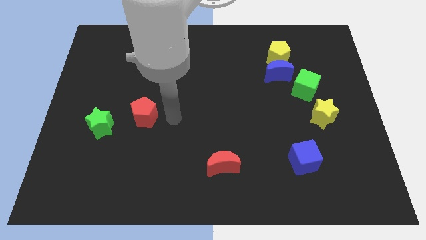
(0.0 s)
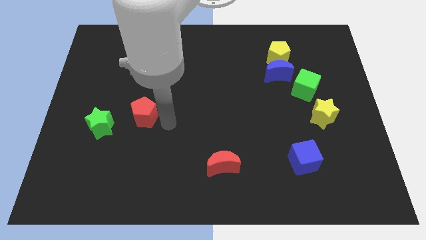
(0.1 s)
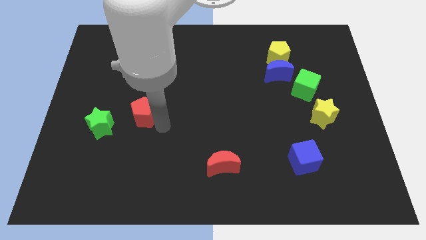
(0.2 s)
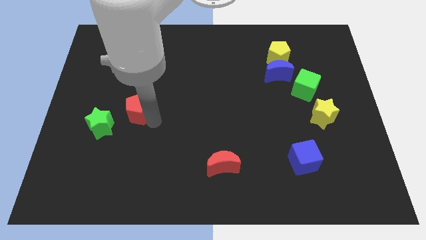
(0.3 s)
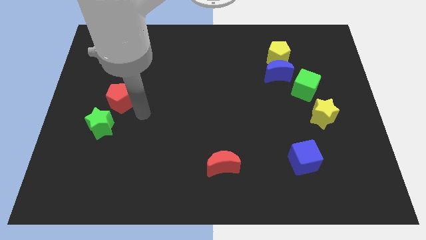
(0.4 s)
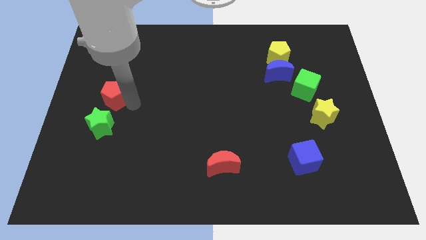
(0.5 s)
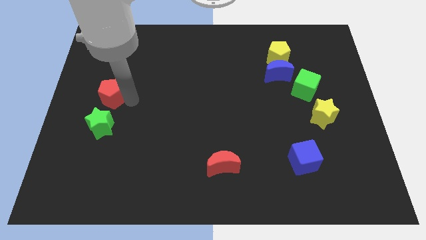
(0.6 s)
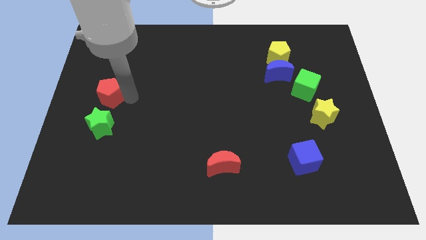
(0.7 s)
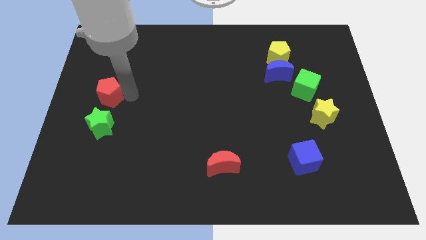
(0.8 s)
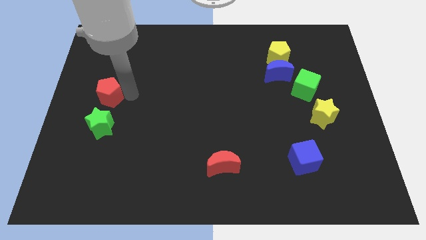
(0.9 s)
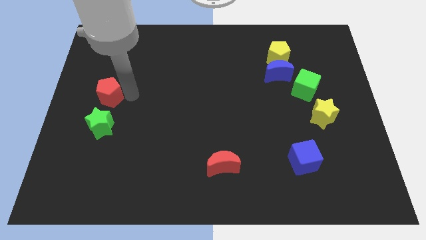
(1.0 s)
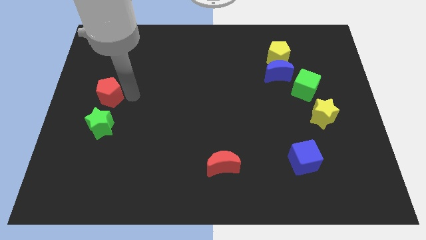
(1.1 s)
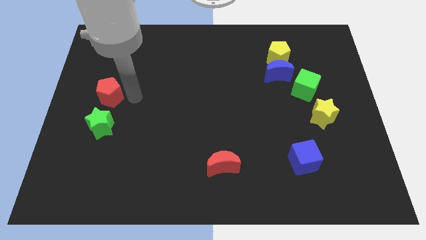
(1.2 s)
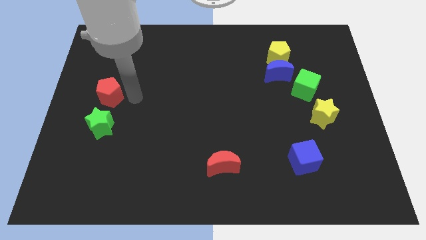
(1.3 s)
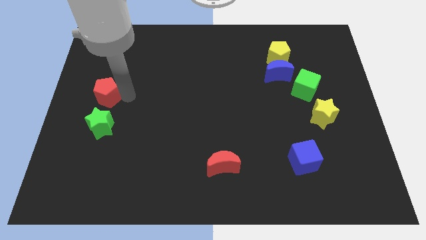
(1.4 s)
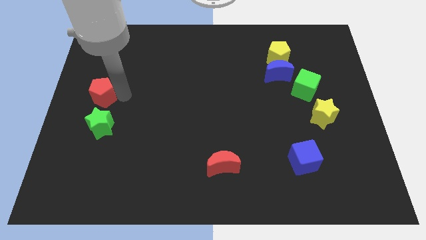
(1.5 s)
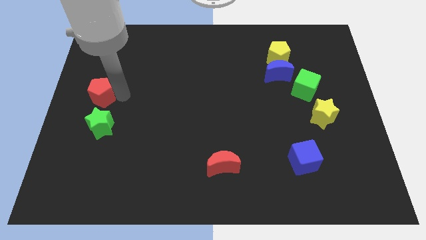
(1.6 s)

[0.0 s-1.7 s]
put the red pentagon at the top side of the green star

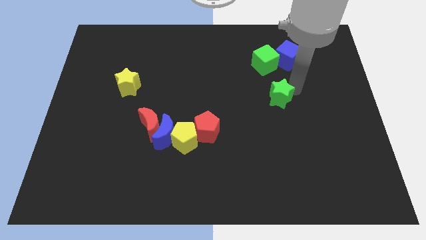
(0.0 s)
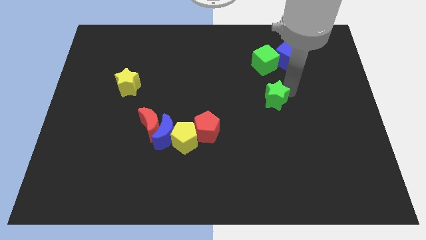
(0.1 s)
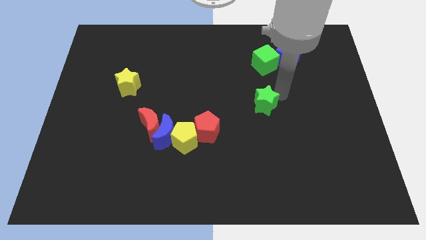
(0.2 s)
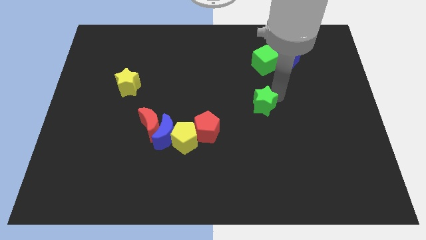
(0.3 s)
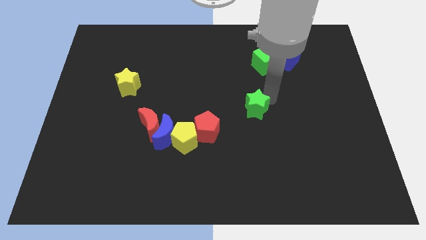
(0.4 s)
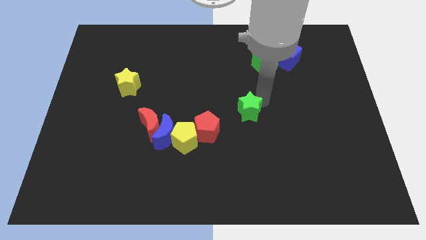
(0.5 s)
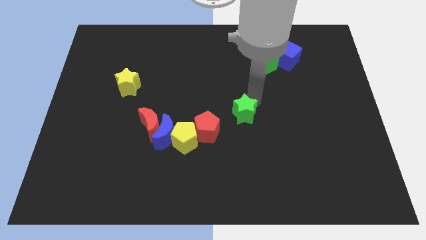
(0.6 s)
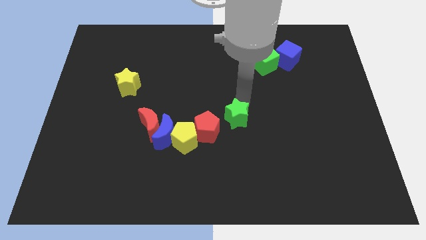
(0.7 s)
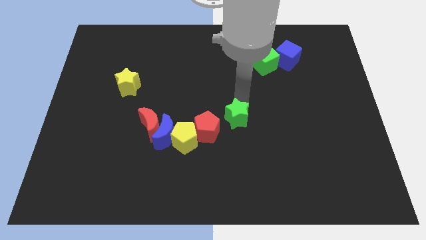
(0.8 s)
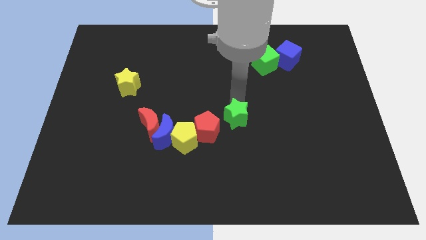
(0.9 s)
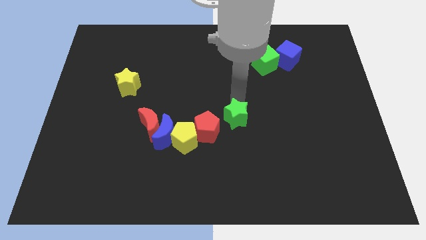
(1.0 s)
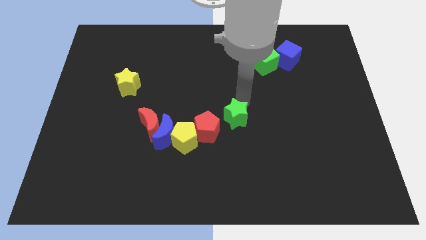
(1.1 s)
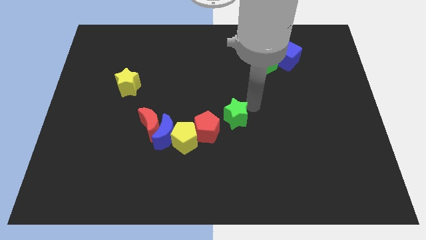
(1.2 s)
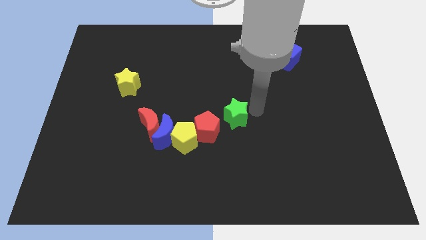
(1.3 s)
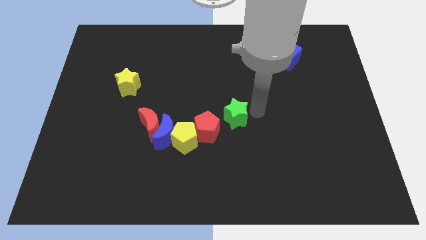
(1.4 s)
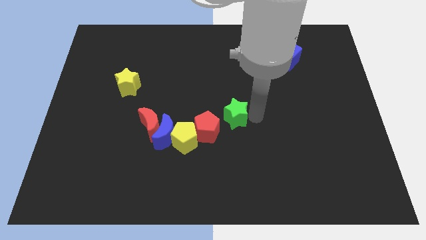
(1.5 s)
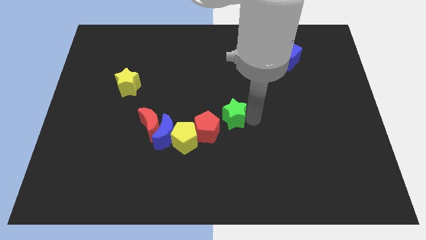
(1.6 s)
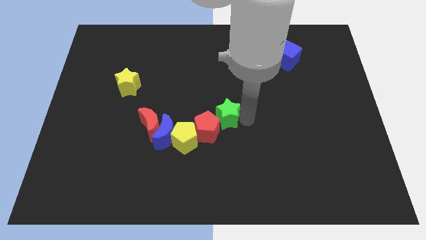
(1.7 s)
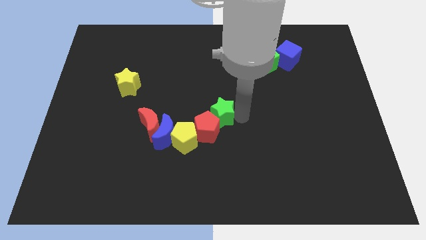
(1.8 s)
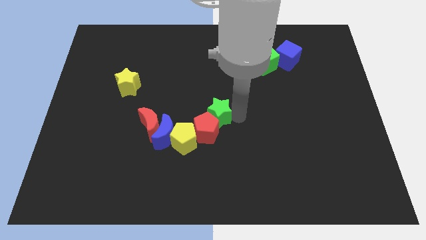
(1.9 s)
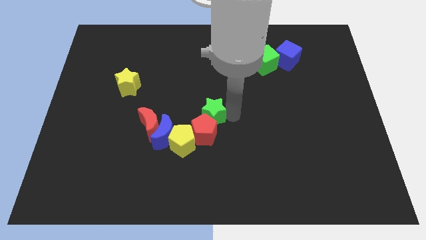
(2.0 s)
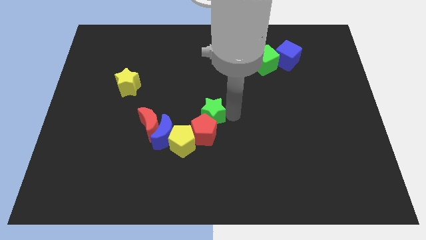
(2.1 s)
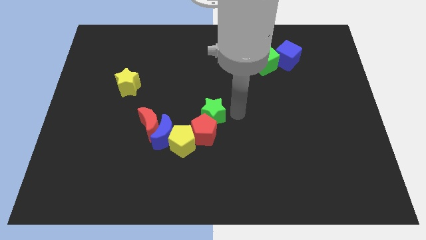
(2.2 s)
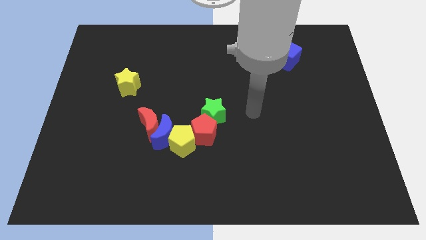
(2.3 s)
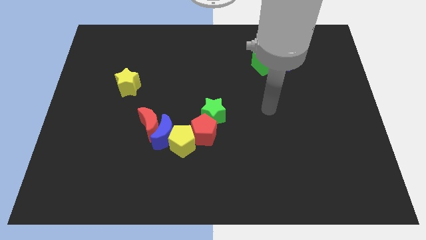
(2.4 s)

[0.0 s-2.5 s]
push the green star into the group of blocks

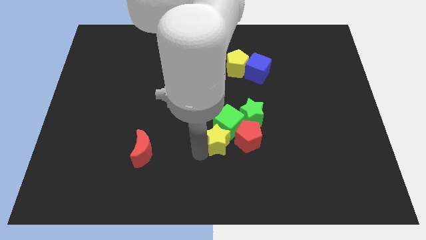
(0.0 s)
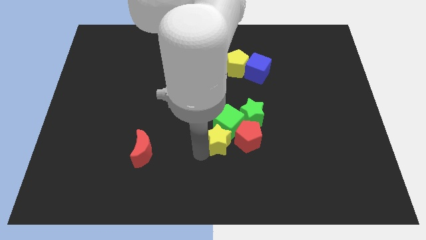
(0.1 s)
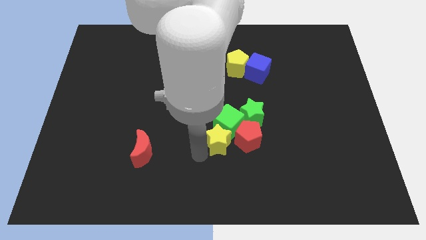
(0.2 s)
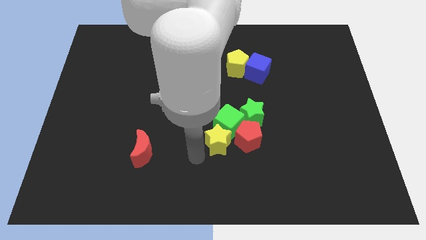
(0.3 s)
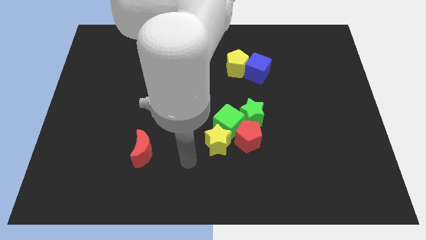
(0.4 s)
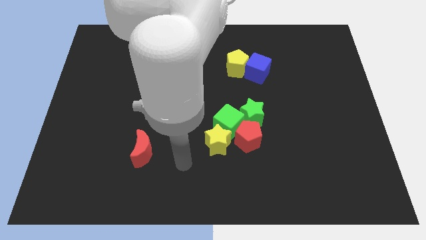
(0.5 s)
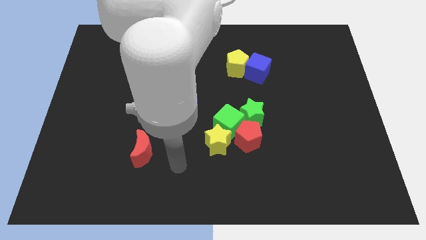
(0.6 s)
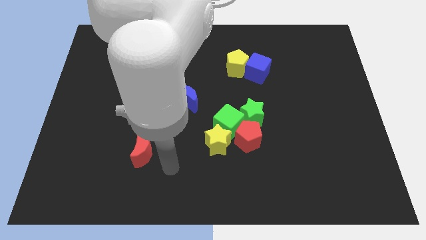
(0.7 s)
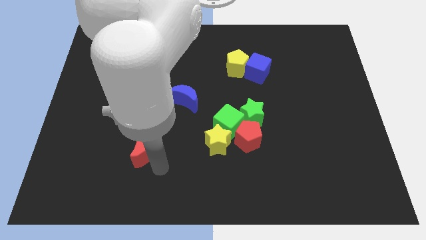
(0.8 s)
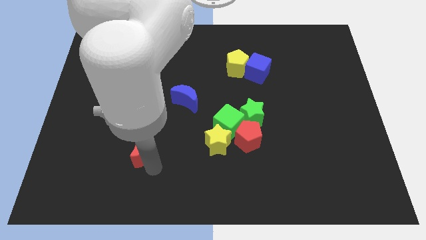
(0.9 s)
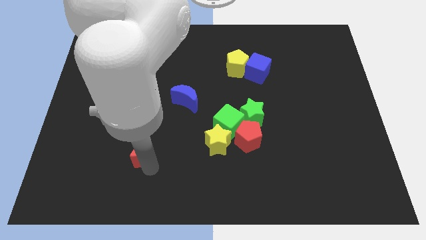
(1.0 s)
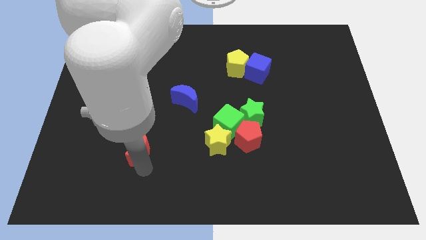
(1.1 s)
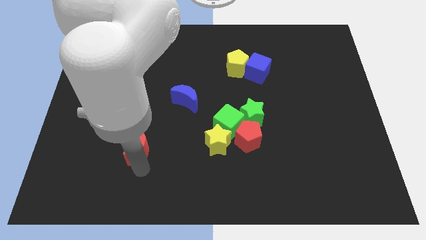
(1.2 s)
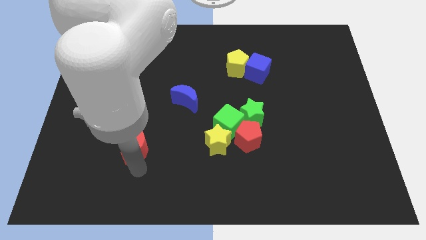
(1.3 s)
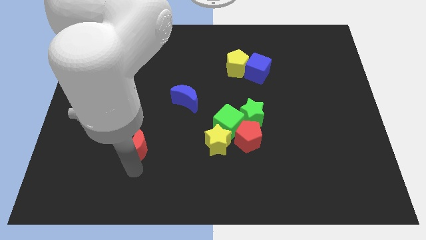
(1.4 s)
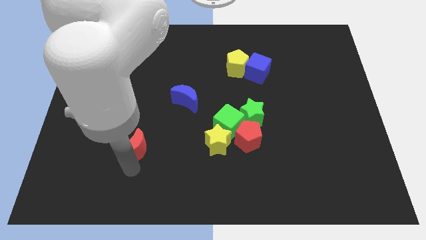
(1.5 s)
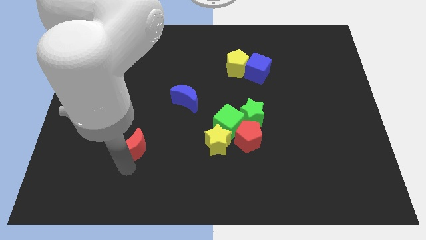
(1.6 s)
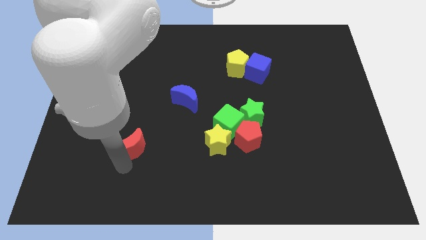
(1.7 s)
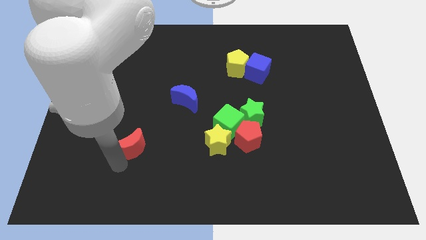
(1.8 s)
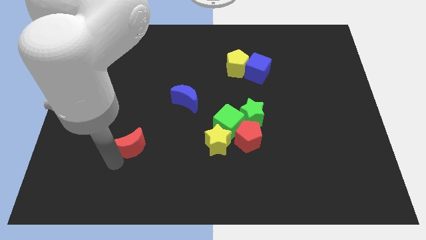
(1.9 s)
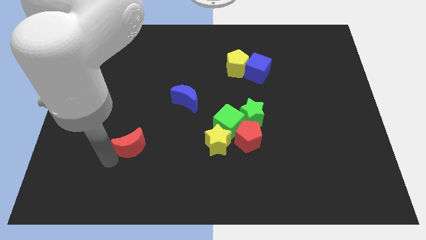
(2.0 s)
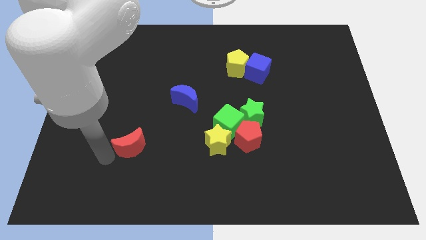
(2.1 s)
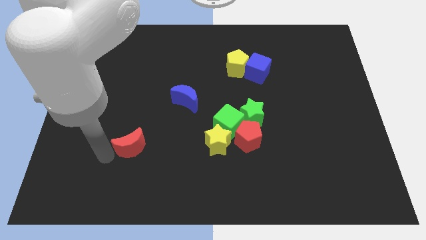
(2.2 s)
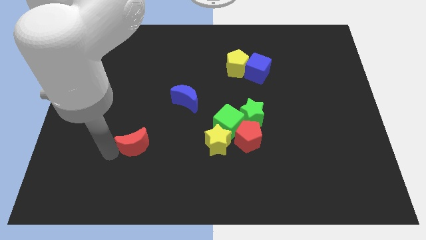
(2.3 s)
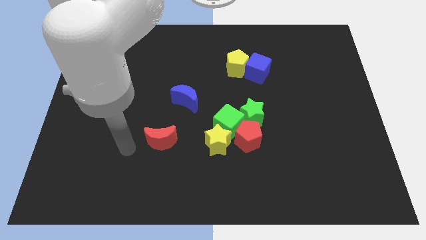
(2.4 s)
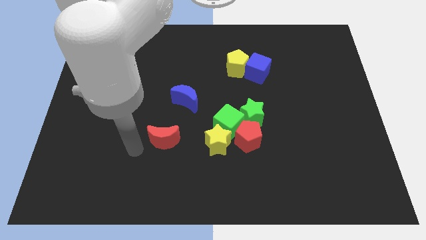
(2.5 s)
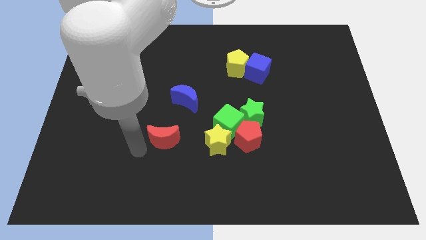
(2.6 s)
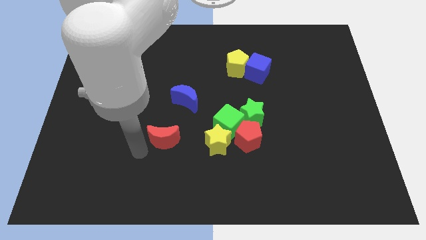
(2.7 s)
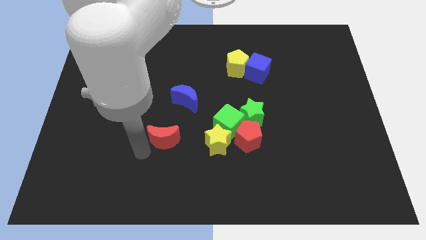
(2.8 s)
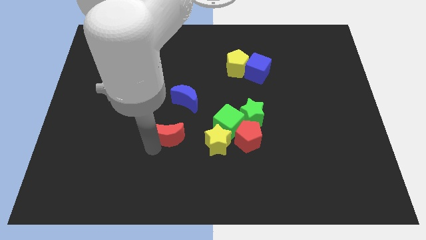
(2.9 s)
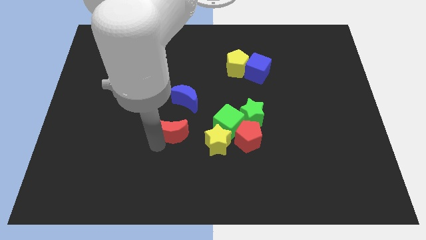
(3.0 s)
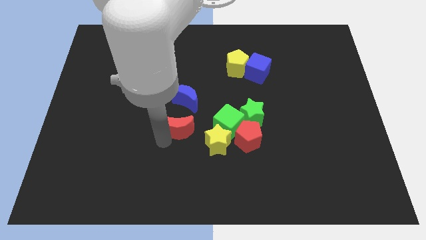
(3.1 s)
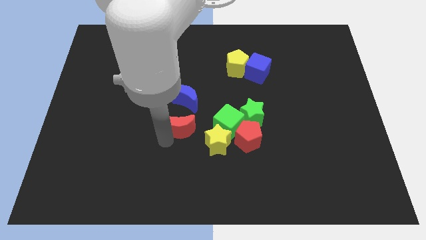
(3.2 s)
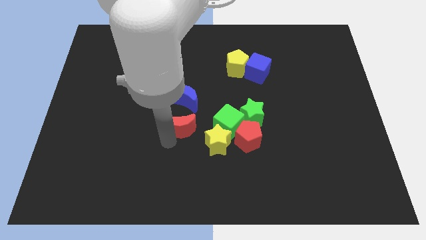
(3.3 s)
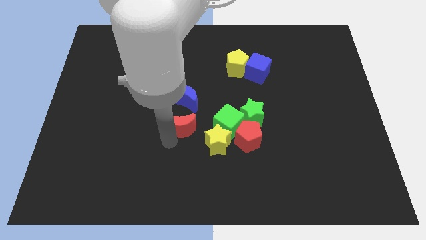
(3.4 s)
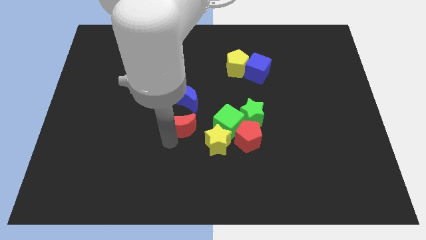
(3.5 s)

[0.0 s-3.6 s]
push the red moon towards the green cube

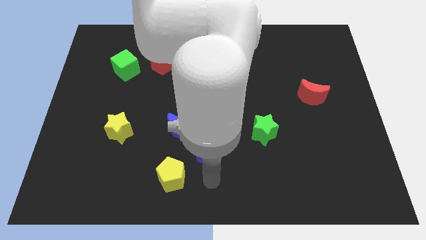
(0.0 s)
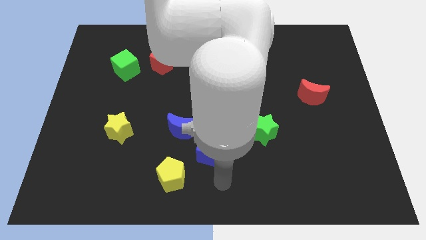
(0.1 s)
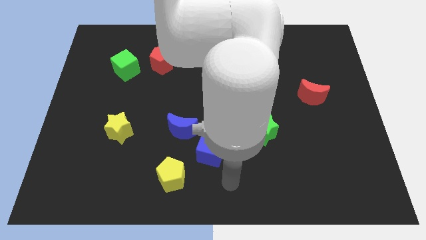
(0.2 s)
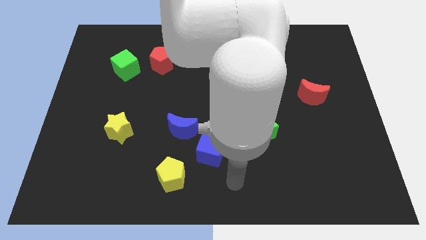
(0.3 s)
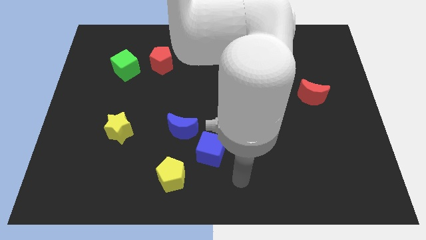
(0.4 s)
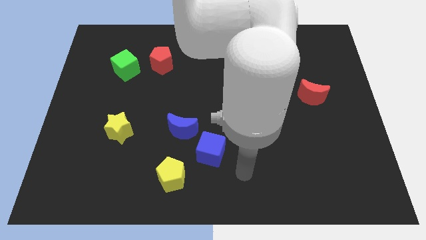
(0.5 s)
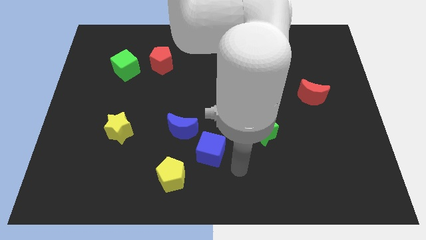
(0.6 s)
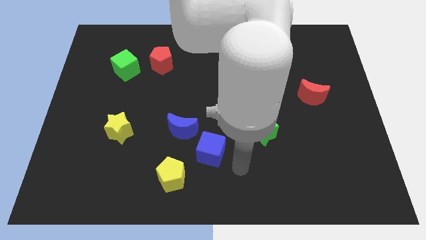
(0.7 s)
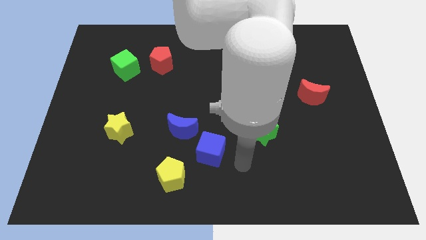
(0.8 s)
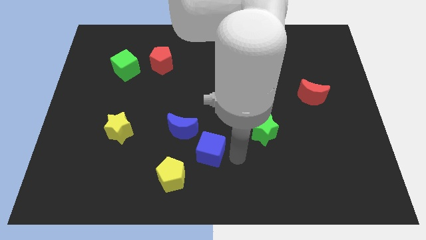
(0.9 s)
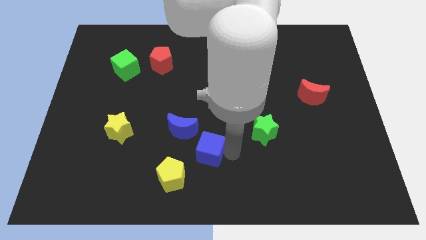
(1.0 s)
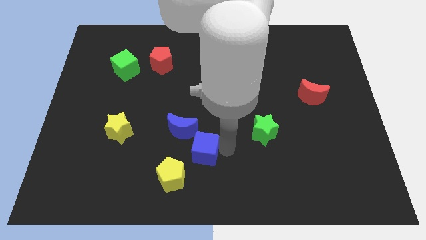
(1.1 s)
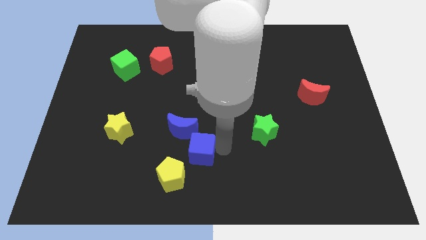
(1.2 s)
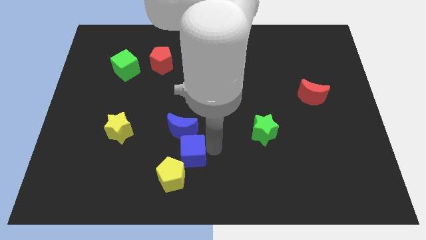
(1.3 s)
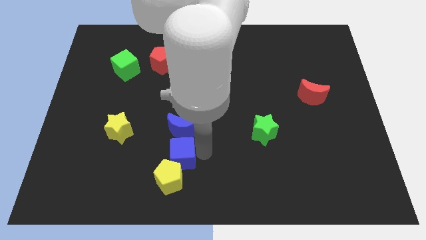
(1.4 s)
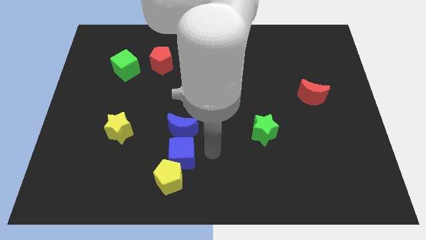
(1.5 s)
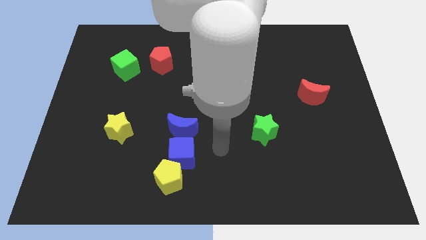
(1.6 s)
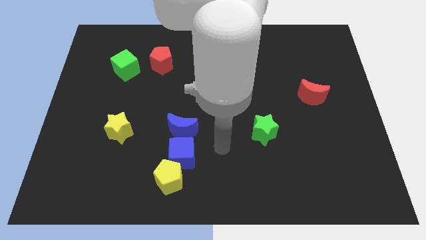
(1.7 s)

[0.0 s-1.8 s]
move the blue cube to the bottom of the blue crescent
